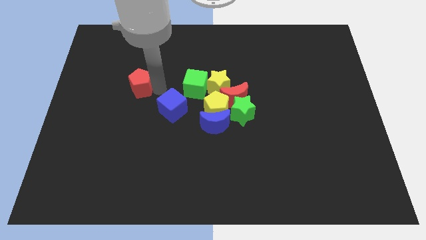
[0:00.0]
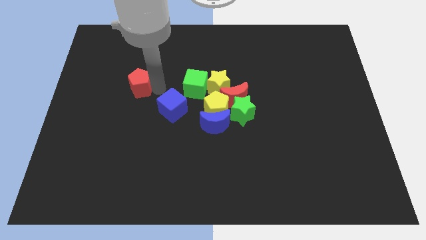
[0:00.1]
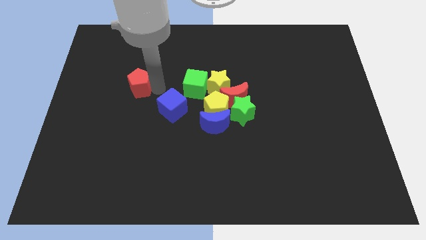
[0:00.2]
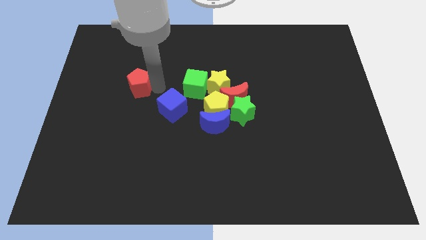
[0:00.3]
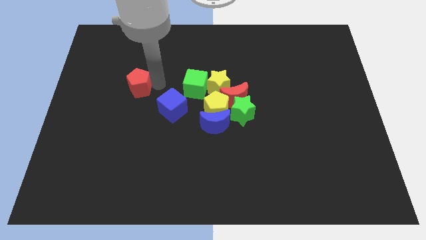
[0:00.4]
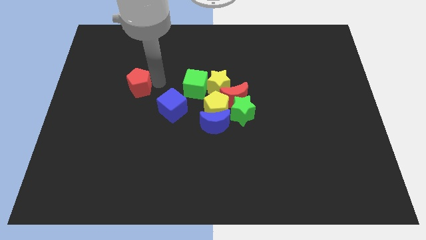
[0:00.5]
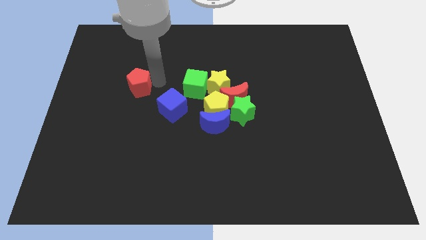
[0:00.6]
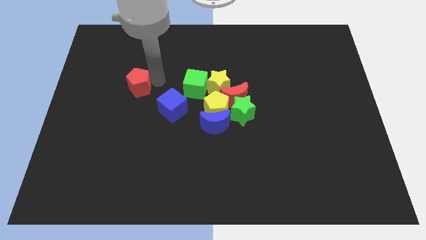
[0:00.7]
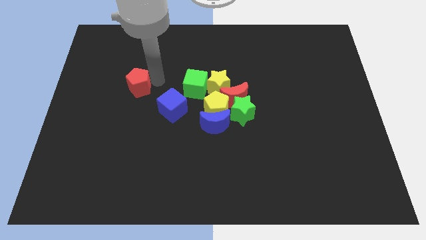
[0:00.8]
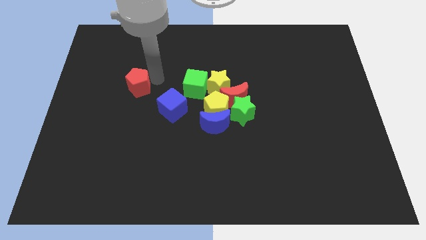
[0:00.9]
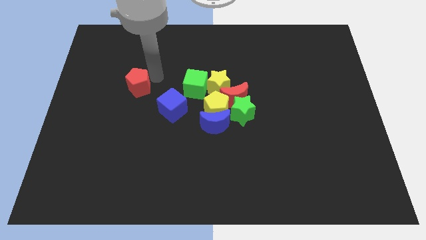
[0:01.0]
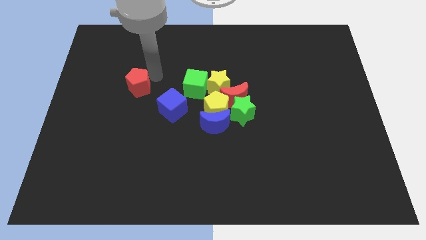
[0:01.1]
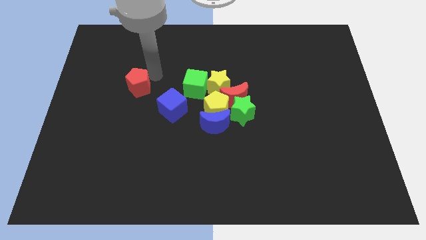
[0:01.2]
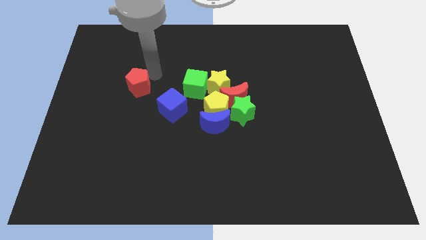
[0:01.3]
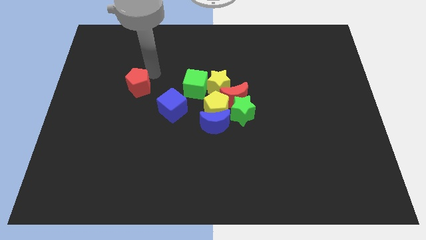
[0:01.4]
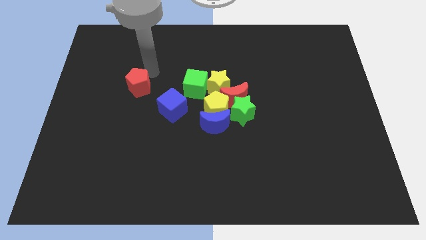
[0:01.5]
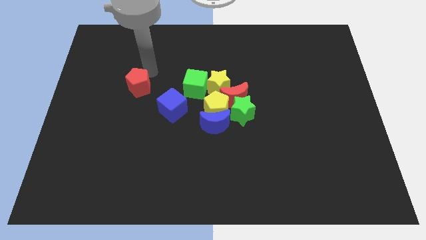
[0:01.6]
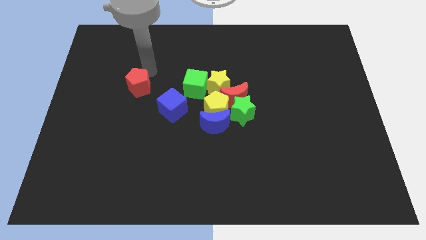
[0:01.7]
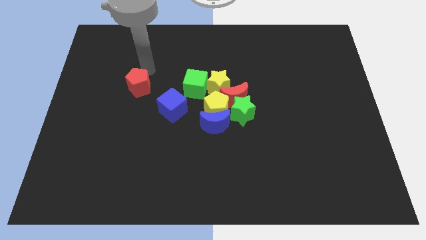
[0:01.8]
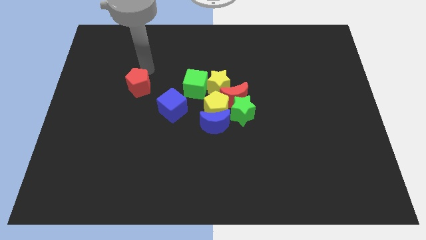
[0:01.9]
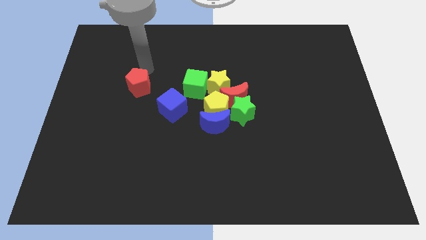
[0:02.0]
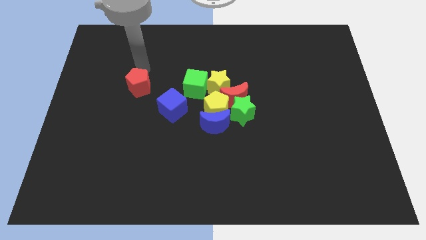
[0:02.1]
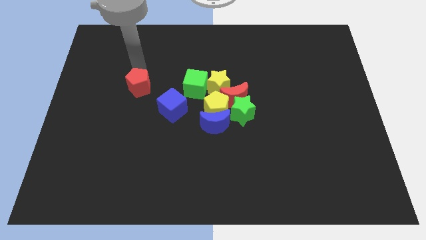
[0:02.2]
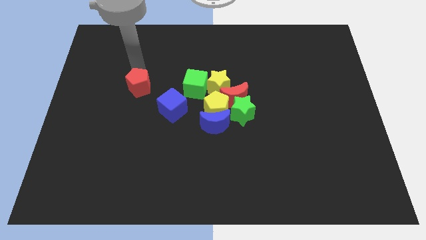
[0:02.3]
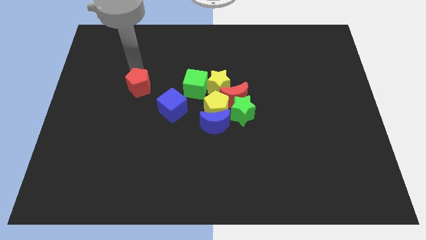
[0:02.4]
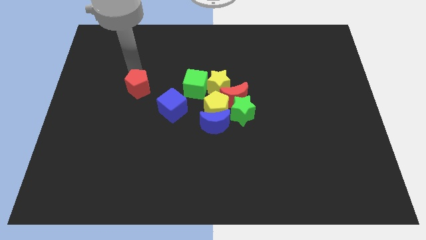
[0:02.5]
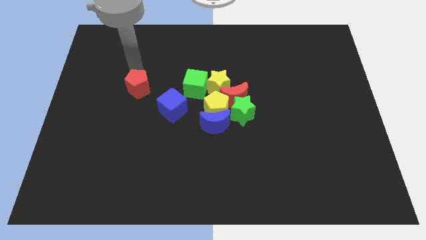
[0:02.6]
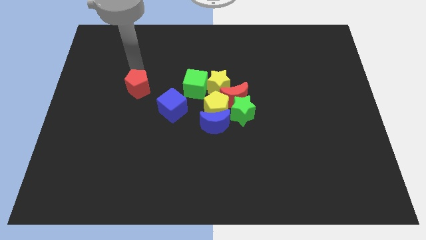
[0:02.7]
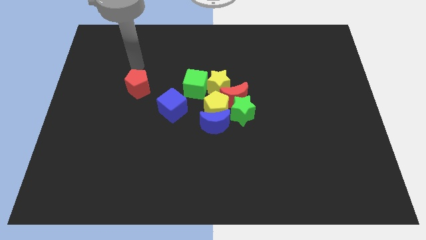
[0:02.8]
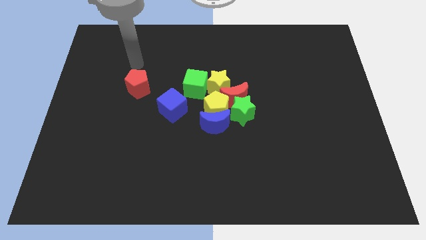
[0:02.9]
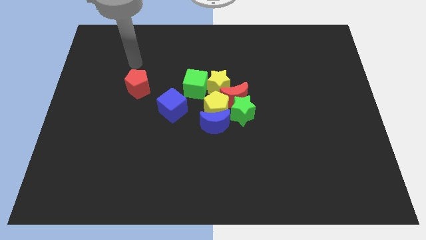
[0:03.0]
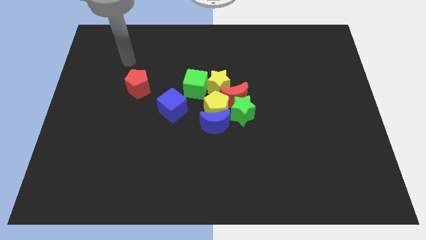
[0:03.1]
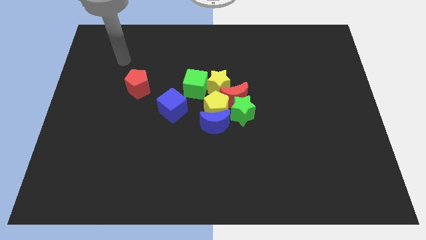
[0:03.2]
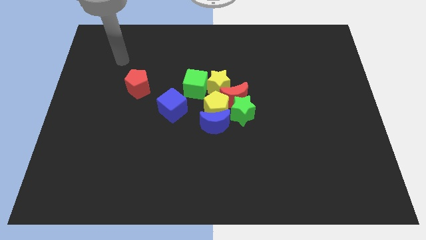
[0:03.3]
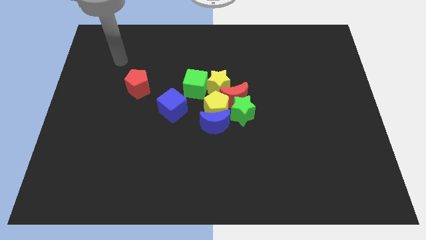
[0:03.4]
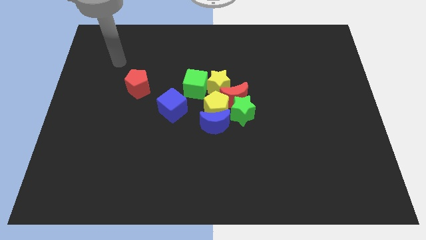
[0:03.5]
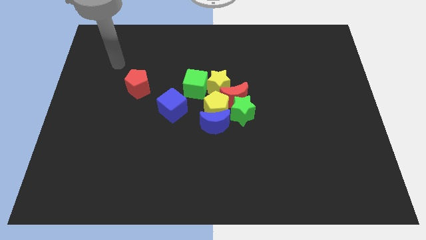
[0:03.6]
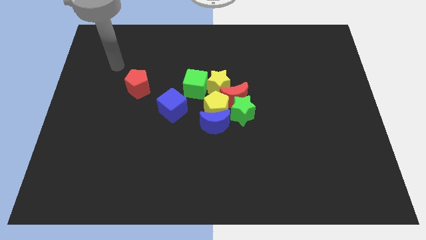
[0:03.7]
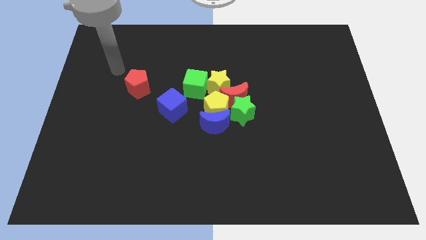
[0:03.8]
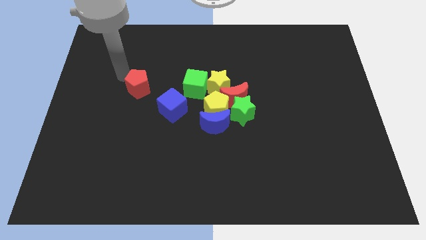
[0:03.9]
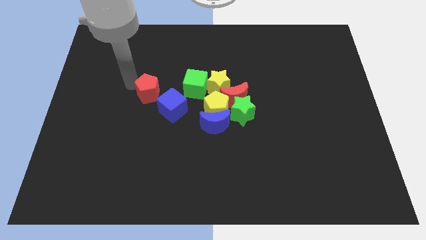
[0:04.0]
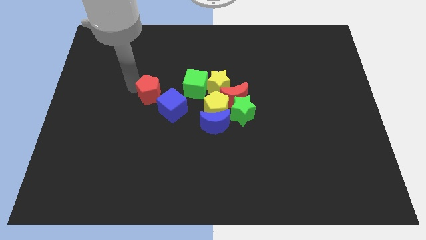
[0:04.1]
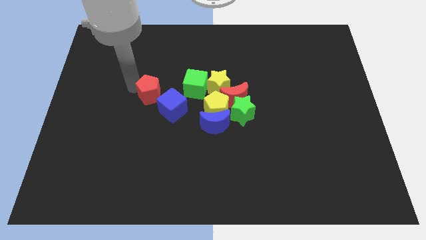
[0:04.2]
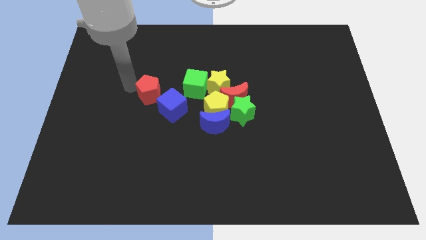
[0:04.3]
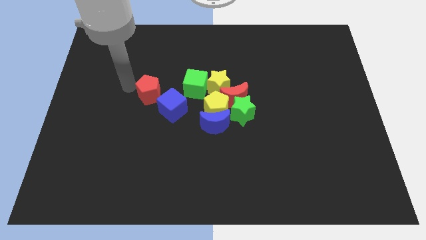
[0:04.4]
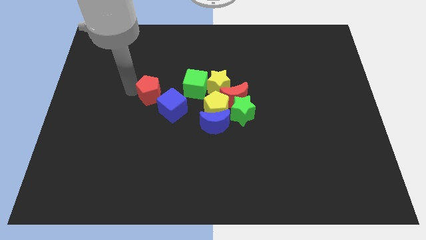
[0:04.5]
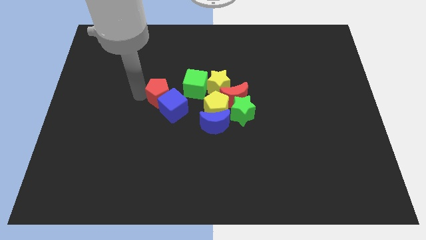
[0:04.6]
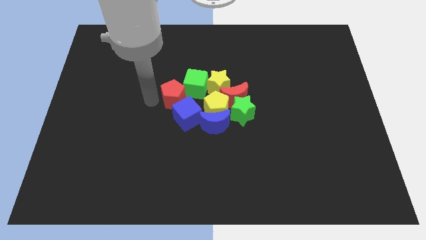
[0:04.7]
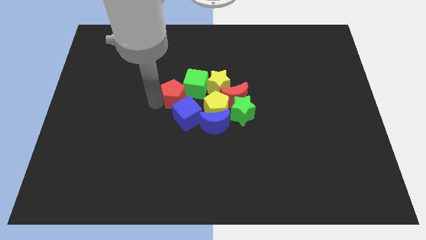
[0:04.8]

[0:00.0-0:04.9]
move red pentagon into group of blocks

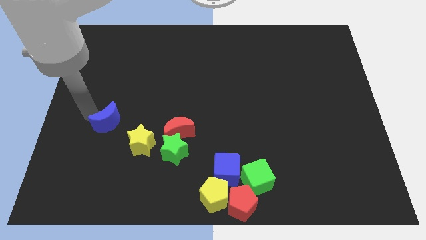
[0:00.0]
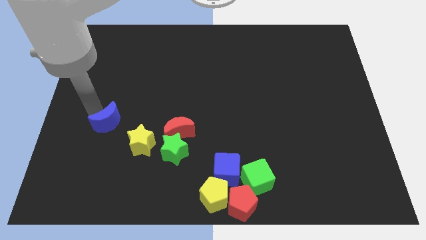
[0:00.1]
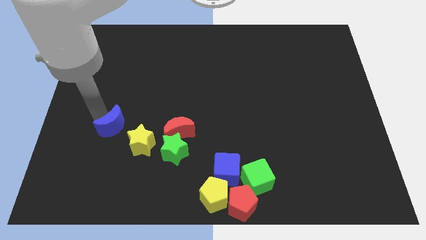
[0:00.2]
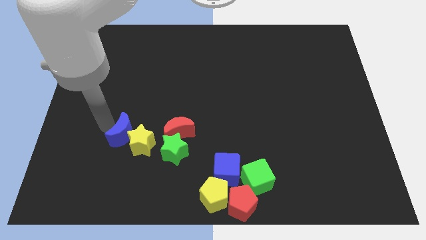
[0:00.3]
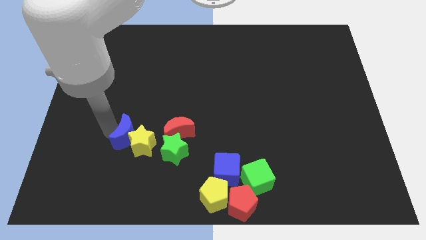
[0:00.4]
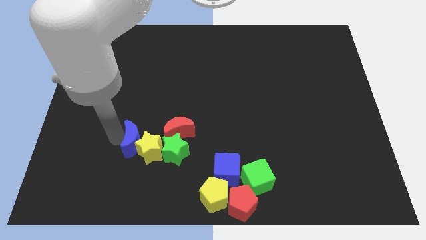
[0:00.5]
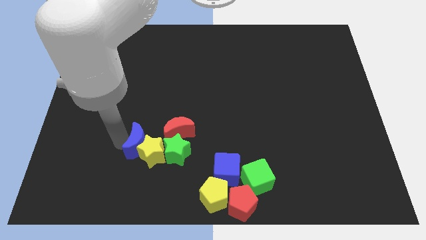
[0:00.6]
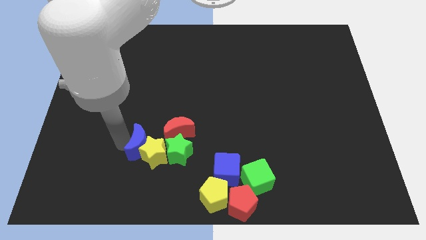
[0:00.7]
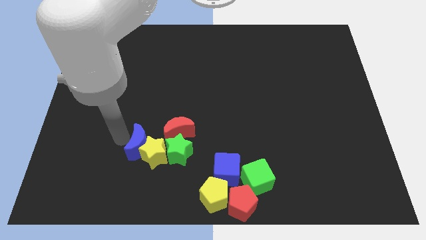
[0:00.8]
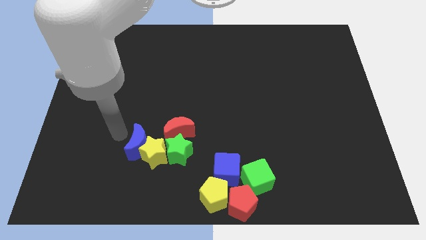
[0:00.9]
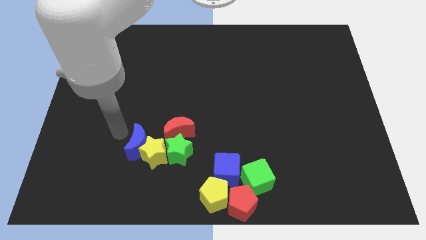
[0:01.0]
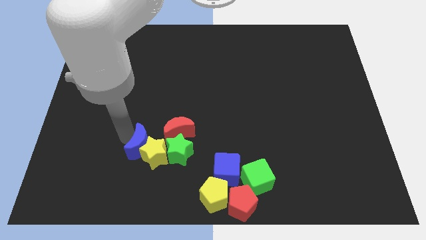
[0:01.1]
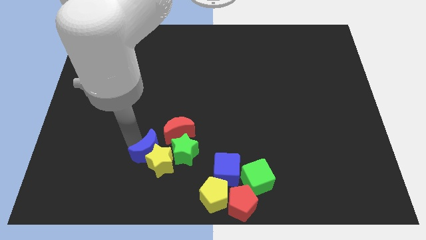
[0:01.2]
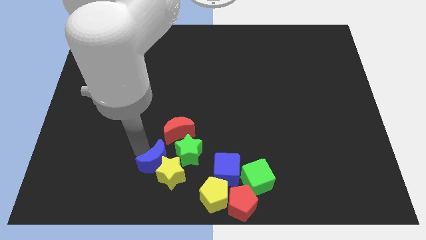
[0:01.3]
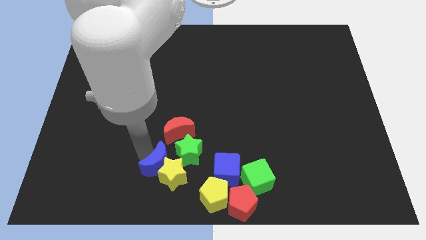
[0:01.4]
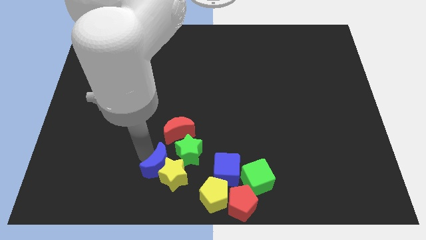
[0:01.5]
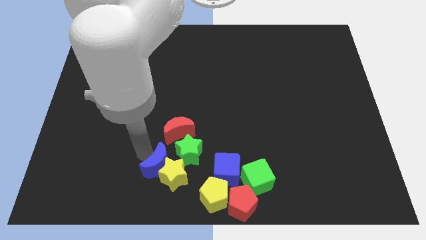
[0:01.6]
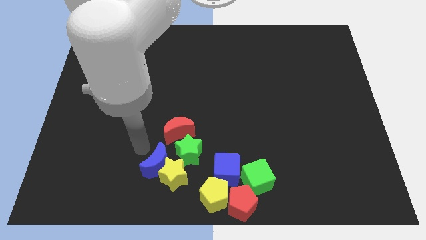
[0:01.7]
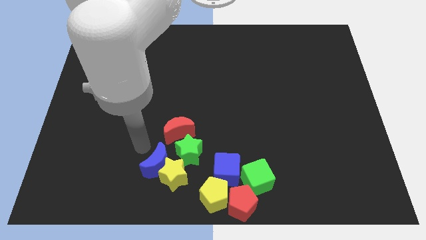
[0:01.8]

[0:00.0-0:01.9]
move the yellow star below the green star

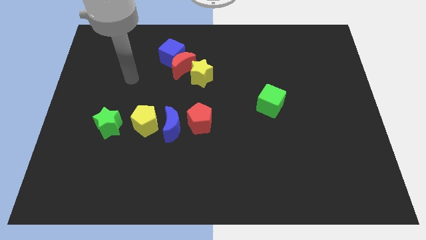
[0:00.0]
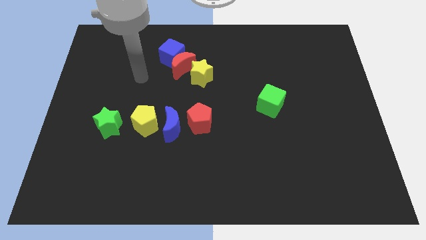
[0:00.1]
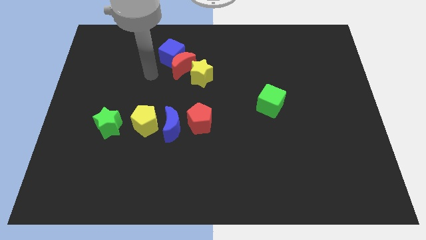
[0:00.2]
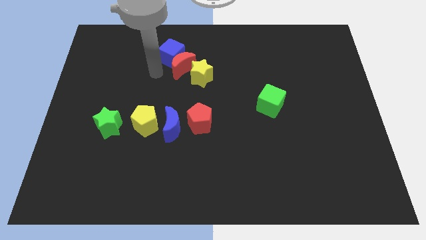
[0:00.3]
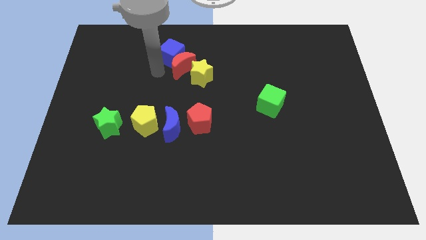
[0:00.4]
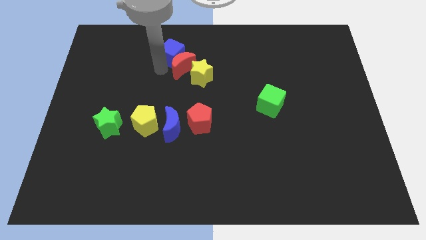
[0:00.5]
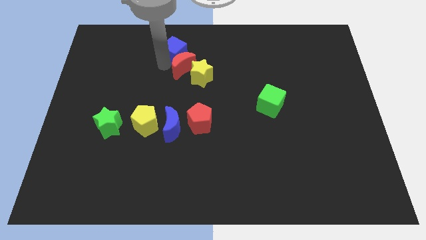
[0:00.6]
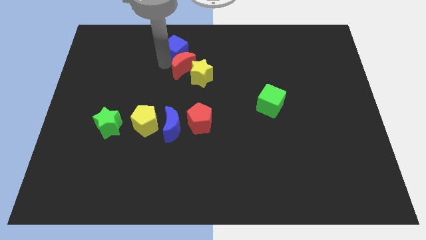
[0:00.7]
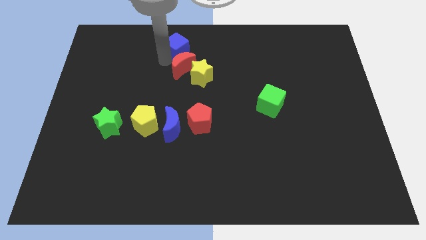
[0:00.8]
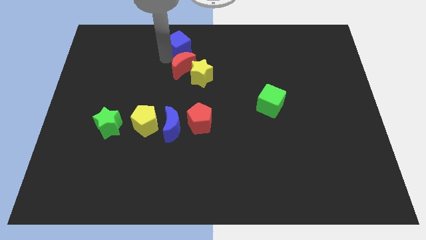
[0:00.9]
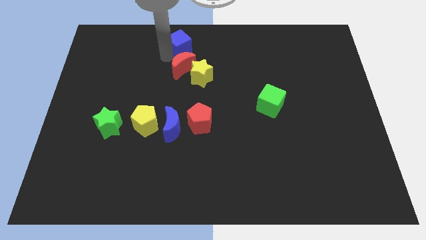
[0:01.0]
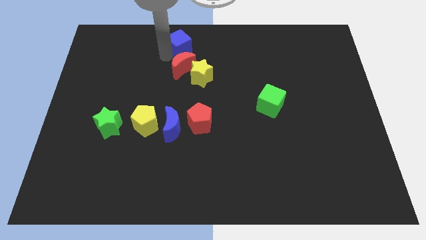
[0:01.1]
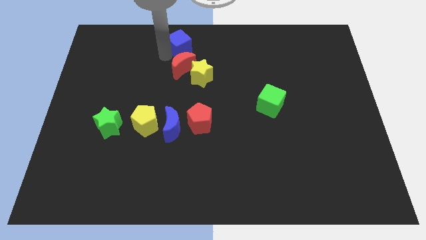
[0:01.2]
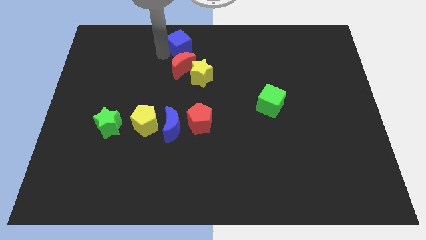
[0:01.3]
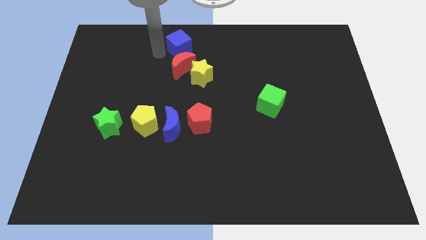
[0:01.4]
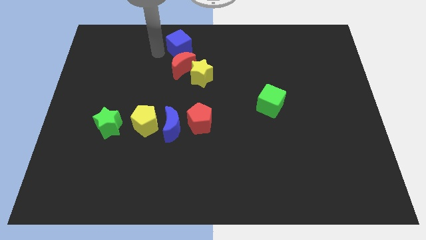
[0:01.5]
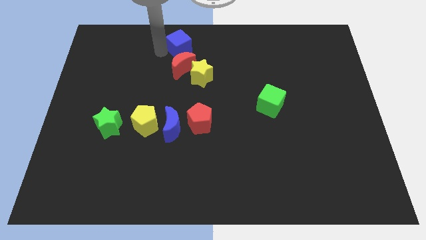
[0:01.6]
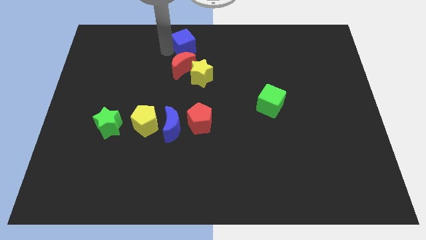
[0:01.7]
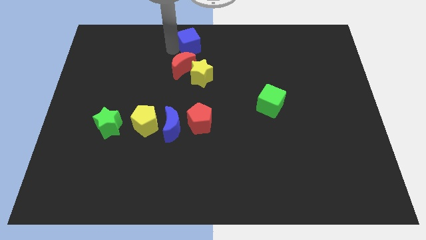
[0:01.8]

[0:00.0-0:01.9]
put the blue cube at the top side of the red crescent

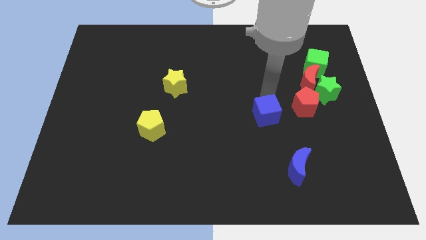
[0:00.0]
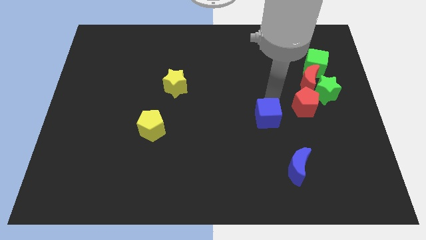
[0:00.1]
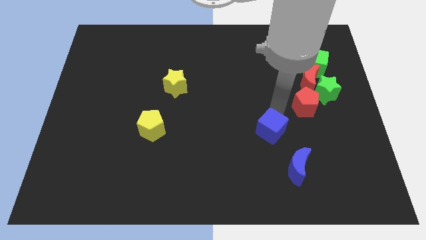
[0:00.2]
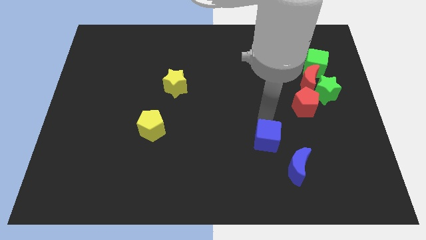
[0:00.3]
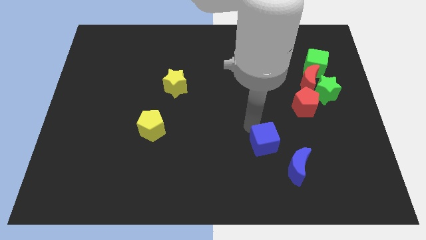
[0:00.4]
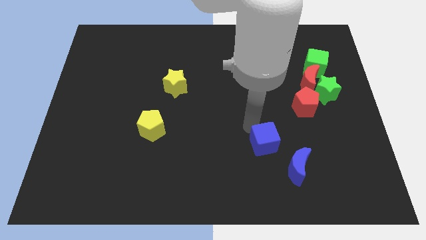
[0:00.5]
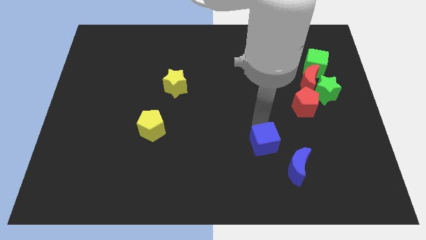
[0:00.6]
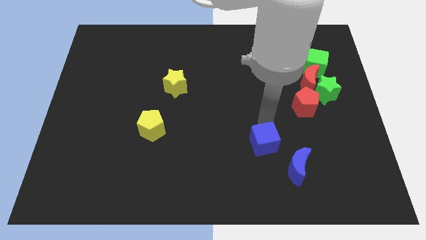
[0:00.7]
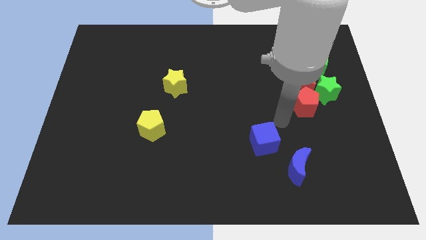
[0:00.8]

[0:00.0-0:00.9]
move blue cube to the top left of the blue moon
